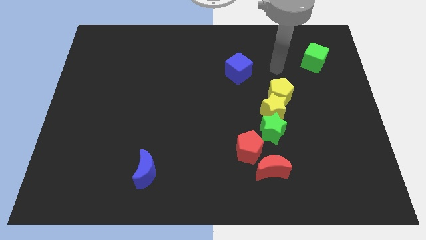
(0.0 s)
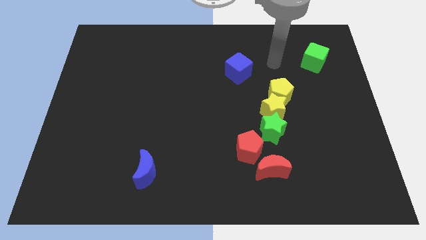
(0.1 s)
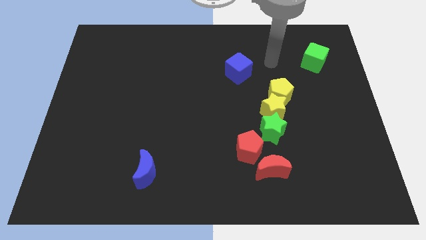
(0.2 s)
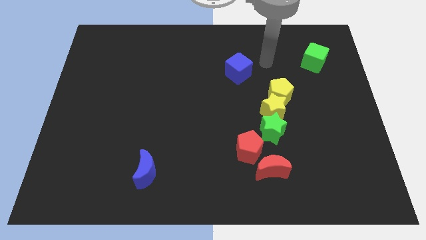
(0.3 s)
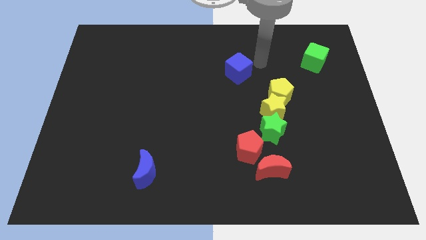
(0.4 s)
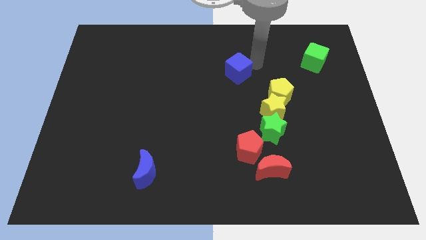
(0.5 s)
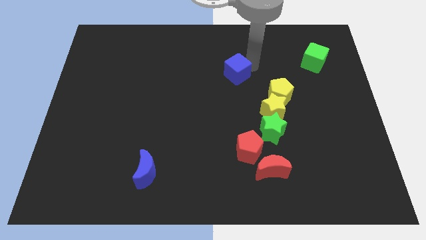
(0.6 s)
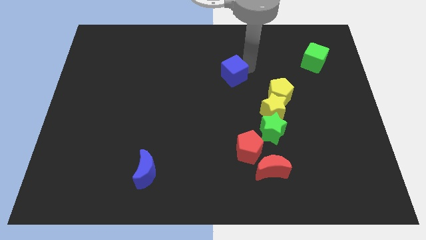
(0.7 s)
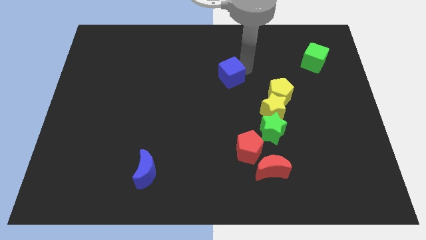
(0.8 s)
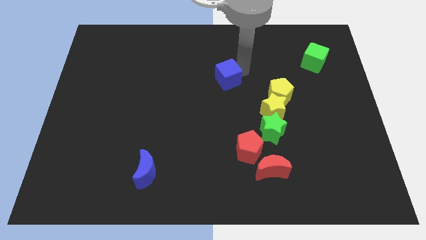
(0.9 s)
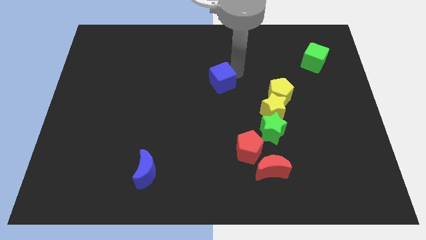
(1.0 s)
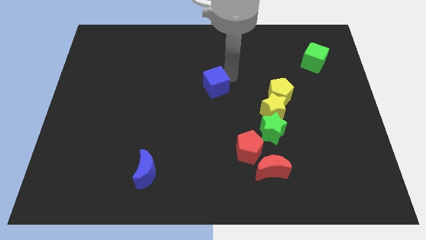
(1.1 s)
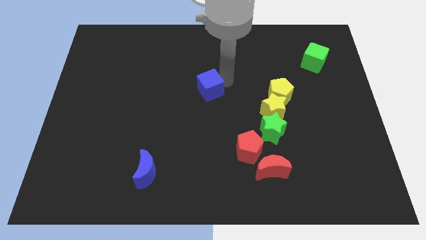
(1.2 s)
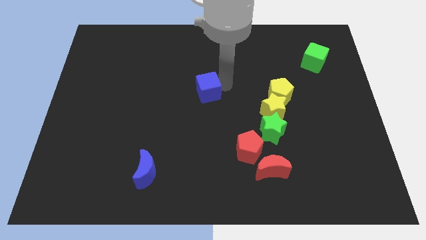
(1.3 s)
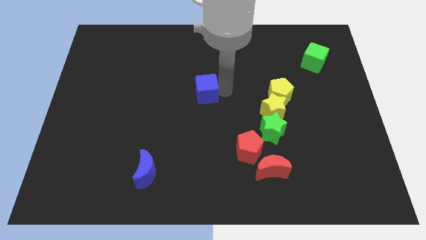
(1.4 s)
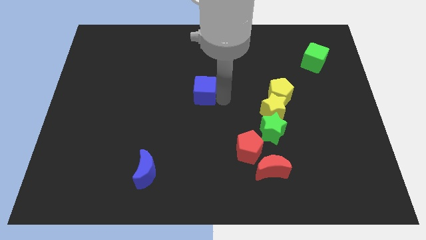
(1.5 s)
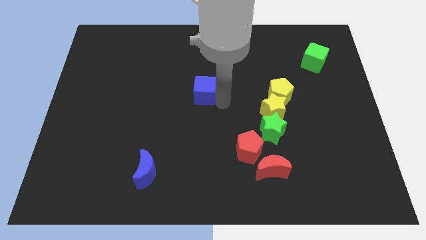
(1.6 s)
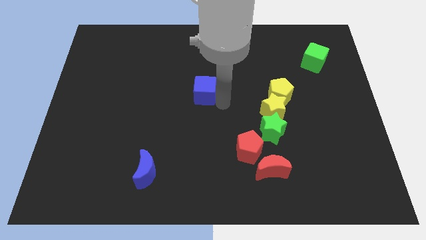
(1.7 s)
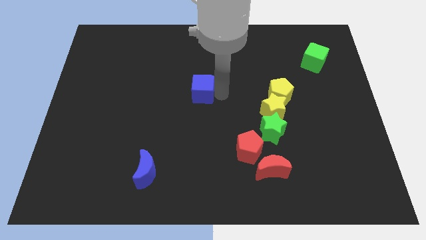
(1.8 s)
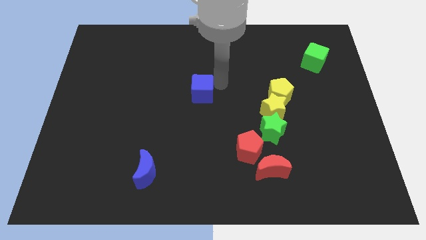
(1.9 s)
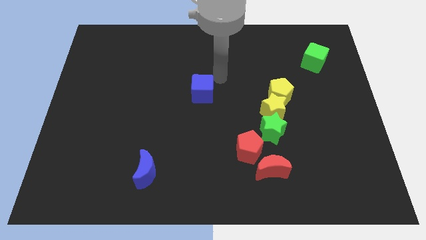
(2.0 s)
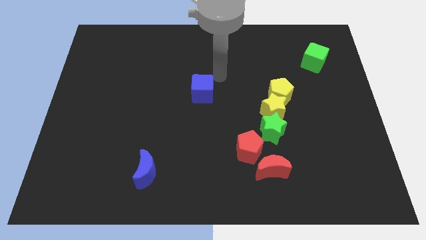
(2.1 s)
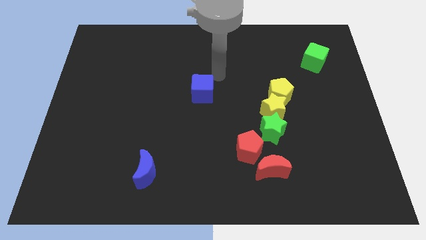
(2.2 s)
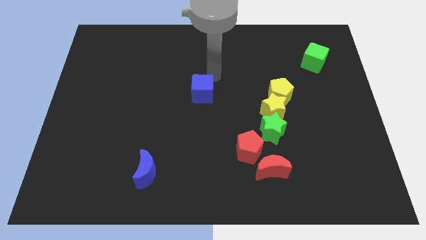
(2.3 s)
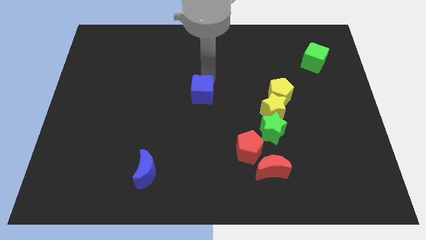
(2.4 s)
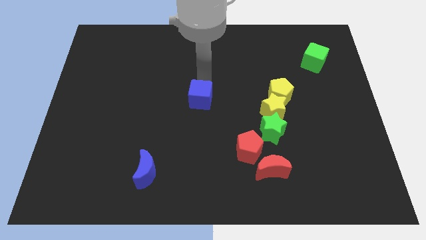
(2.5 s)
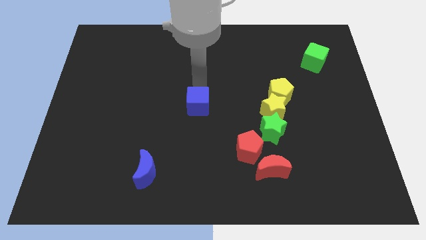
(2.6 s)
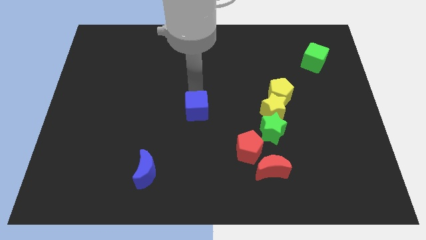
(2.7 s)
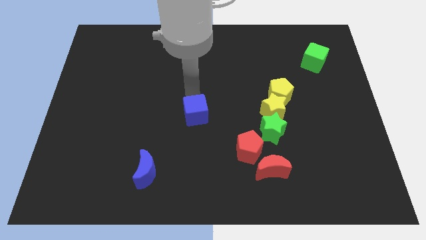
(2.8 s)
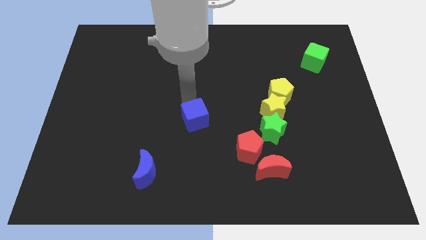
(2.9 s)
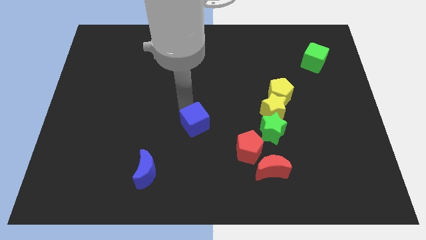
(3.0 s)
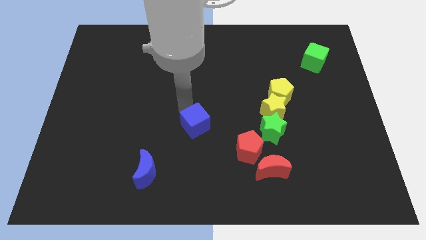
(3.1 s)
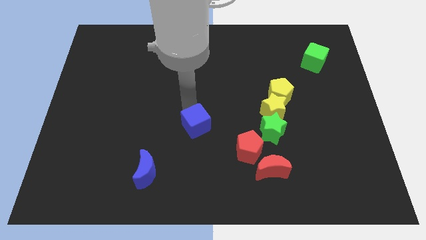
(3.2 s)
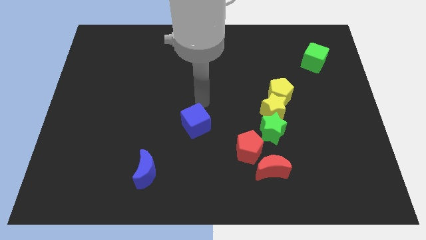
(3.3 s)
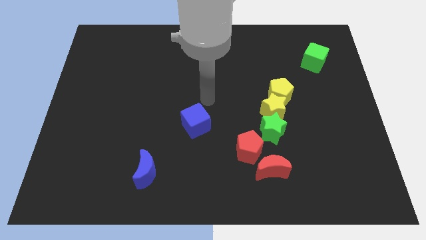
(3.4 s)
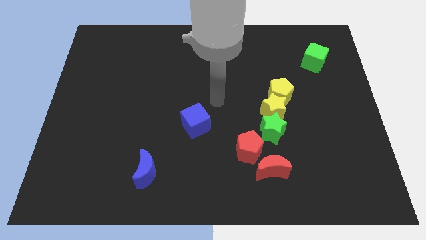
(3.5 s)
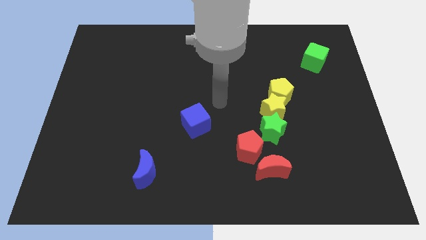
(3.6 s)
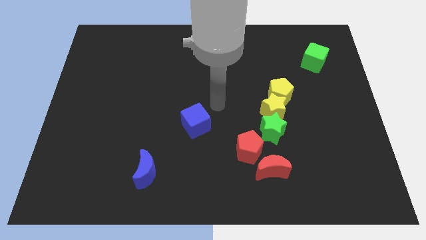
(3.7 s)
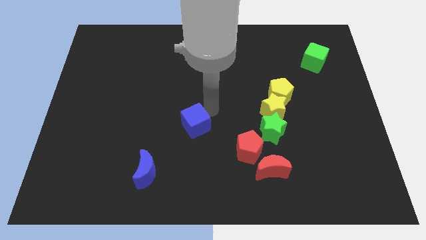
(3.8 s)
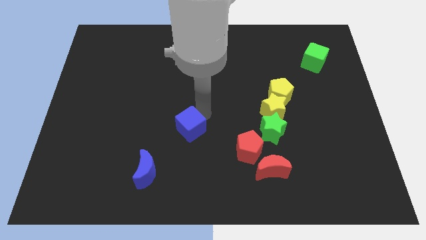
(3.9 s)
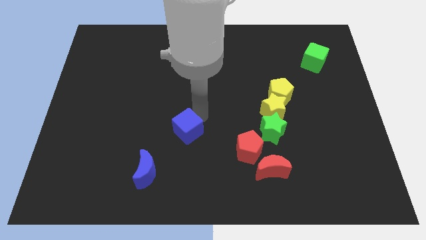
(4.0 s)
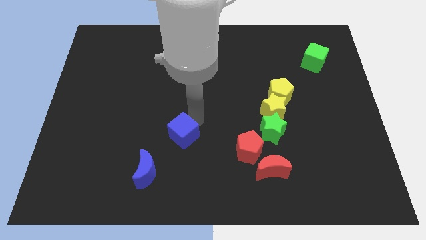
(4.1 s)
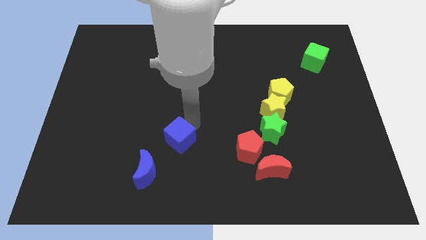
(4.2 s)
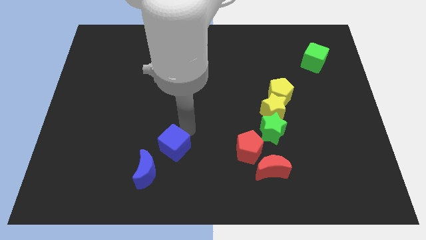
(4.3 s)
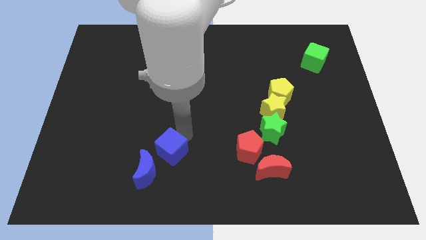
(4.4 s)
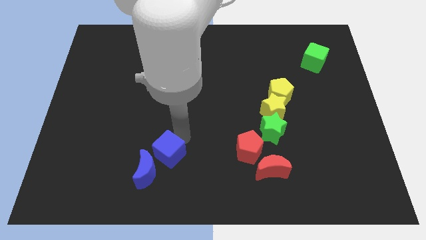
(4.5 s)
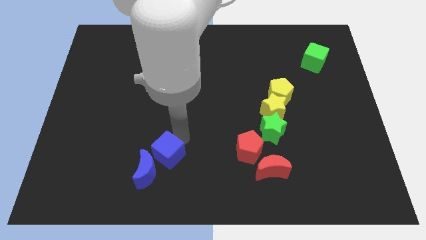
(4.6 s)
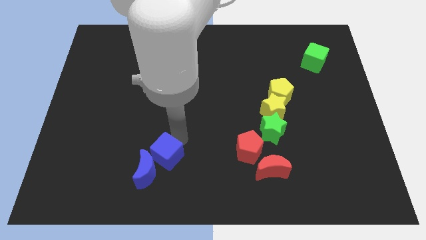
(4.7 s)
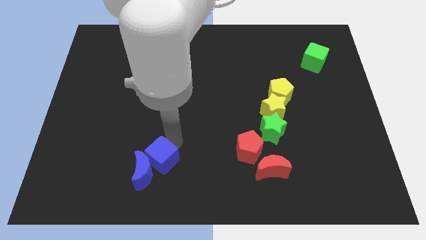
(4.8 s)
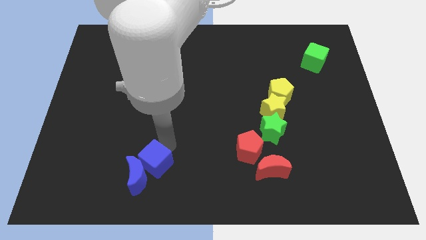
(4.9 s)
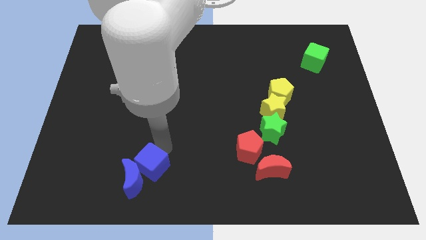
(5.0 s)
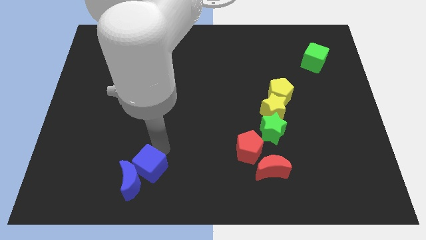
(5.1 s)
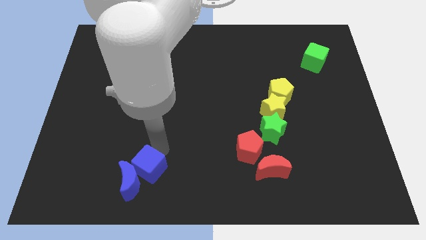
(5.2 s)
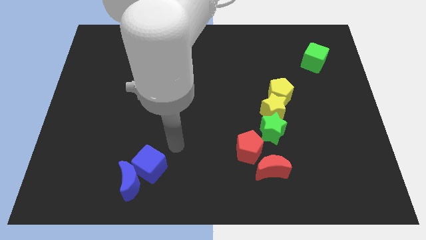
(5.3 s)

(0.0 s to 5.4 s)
push the blue cube into the blue moon

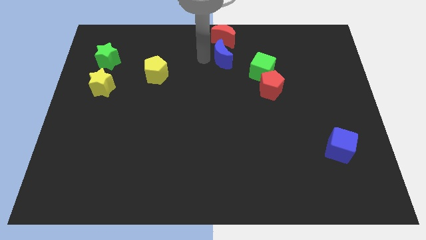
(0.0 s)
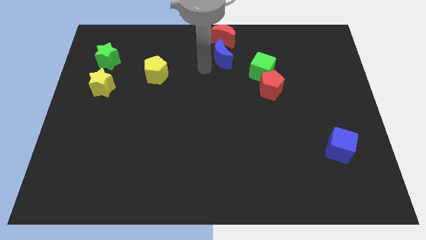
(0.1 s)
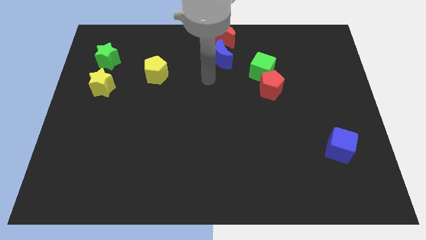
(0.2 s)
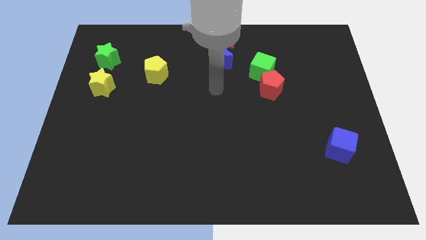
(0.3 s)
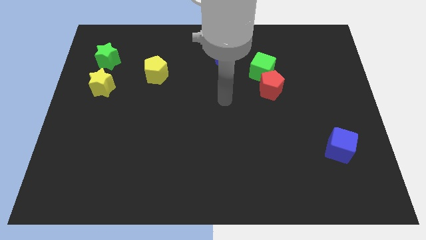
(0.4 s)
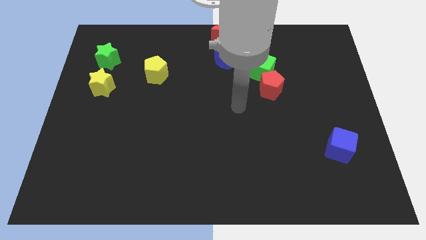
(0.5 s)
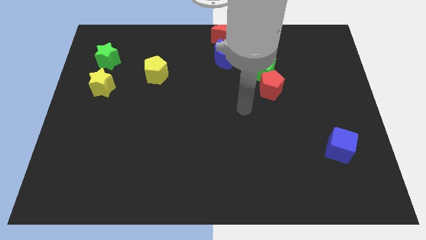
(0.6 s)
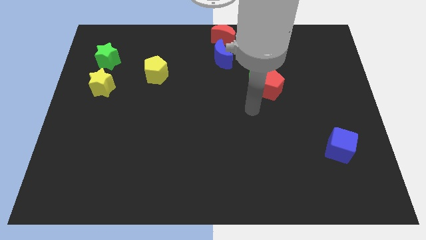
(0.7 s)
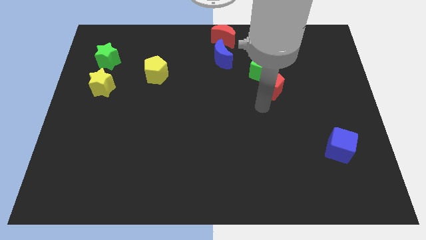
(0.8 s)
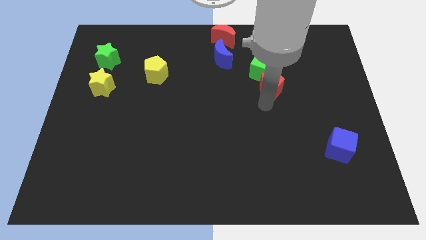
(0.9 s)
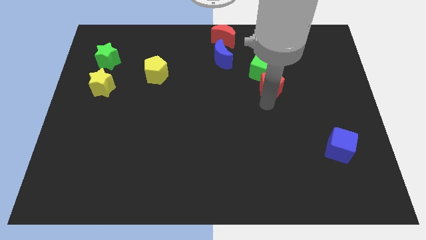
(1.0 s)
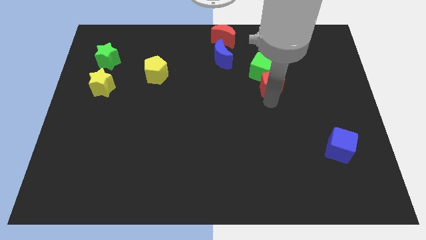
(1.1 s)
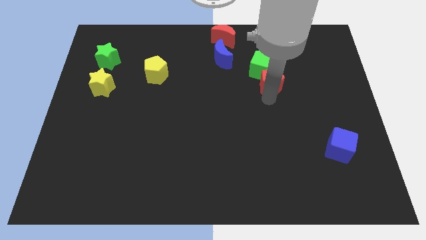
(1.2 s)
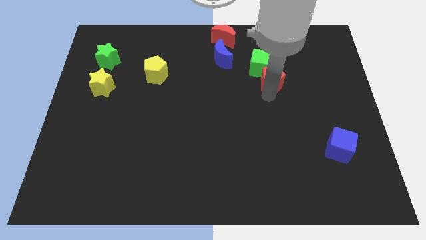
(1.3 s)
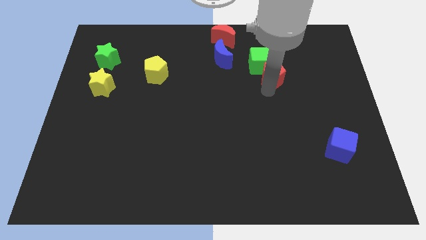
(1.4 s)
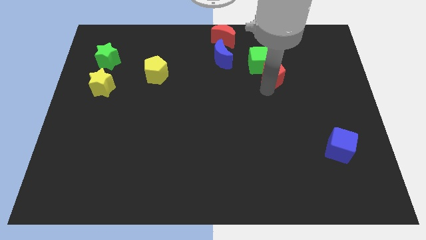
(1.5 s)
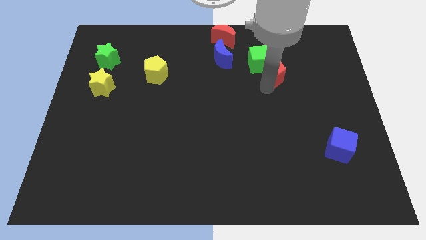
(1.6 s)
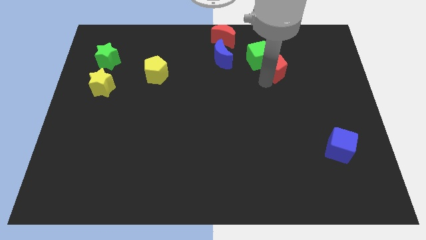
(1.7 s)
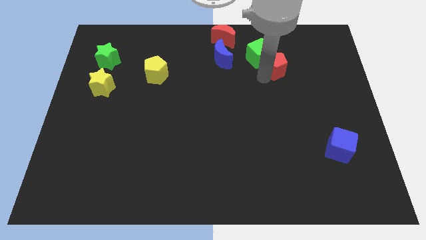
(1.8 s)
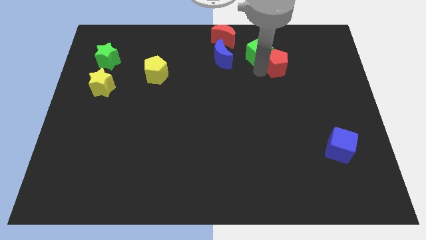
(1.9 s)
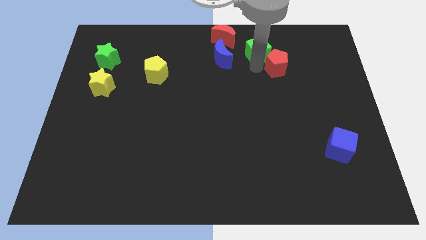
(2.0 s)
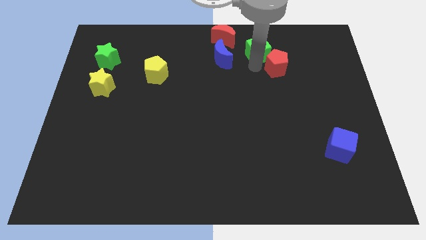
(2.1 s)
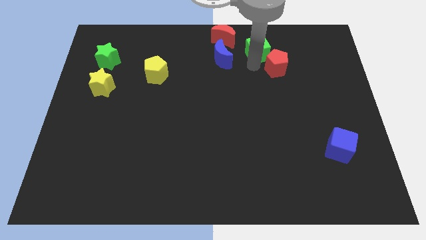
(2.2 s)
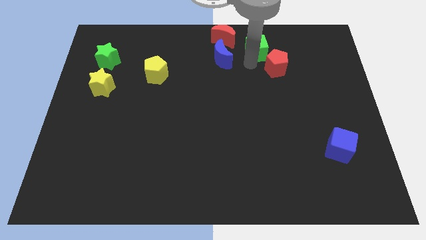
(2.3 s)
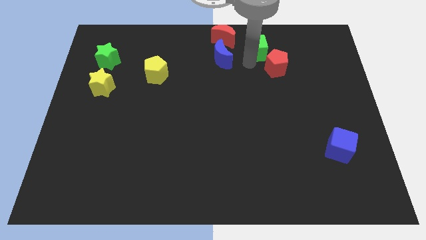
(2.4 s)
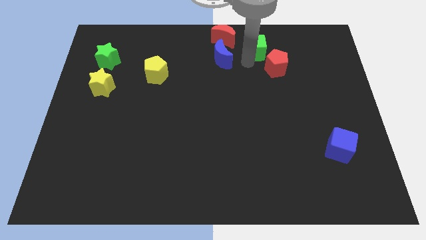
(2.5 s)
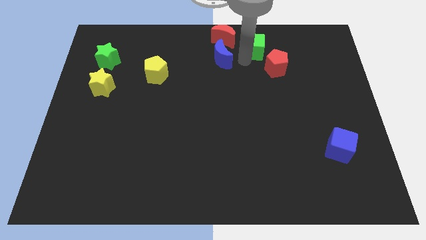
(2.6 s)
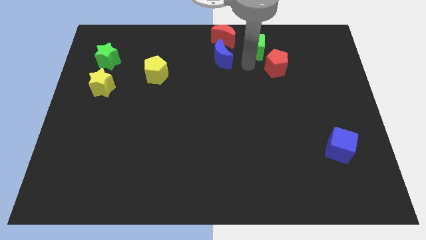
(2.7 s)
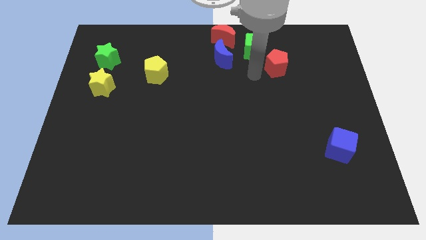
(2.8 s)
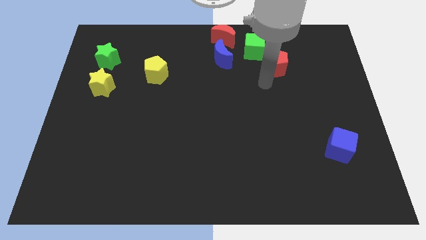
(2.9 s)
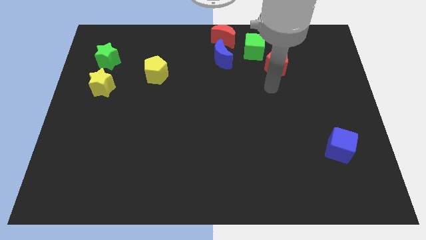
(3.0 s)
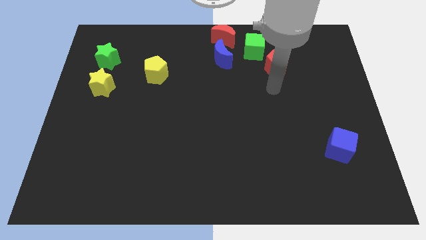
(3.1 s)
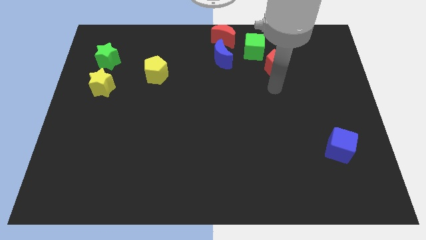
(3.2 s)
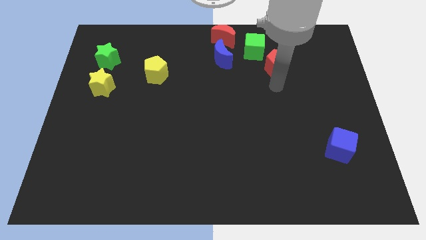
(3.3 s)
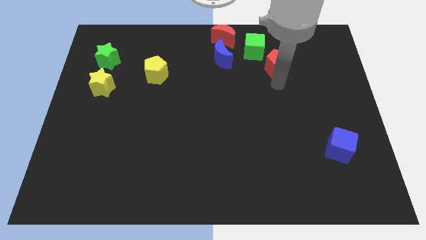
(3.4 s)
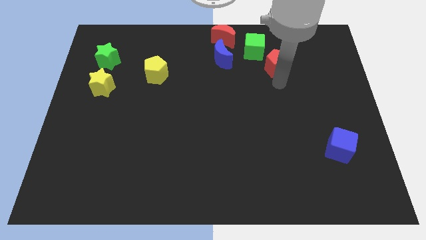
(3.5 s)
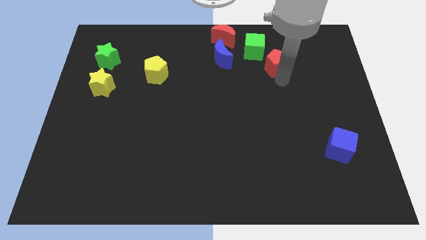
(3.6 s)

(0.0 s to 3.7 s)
push the green cube up slightly
